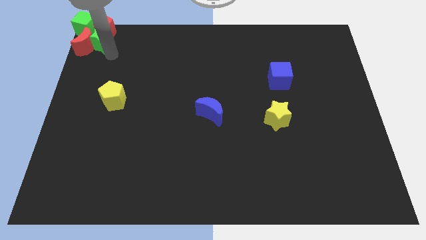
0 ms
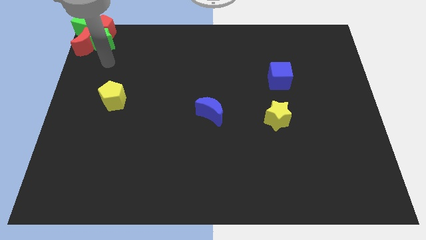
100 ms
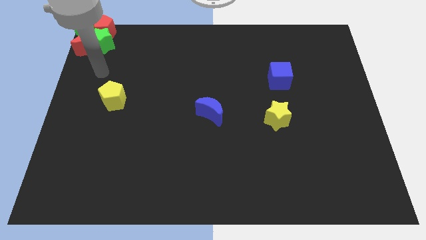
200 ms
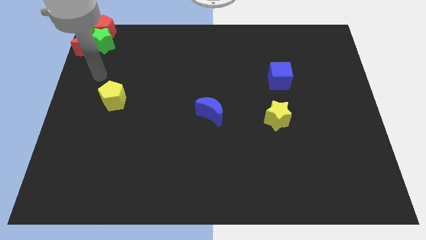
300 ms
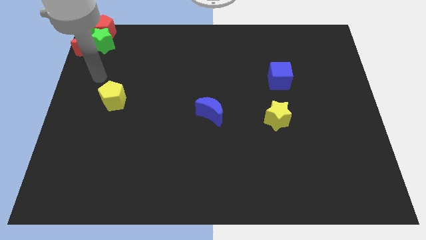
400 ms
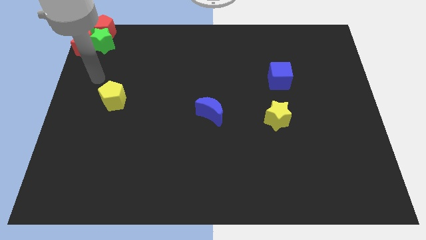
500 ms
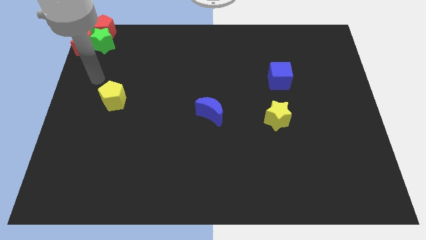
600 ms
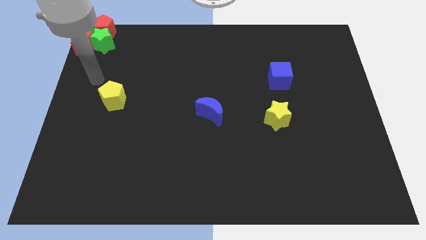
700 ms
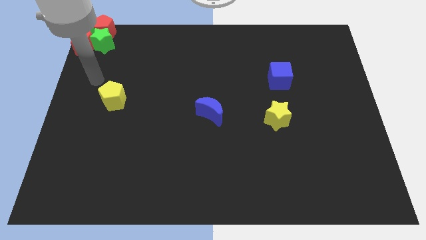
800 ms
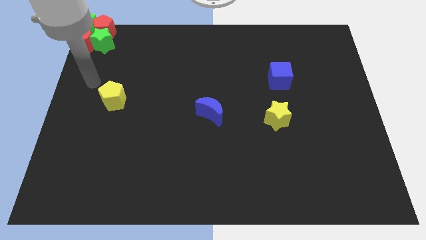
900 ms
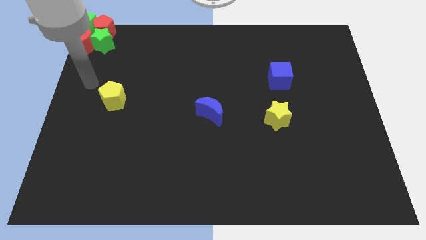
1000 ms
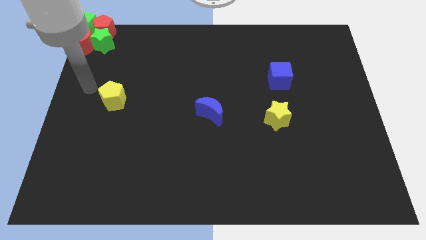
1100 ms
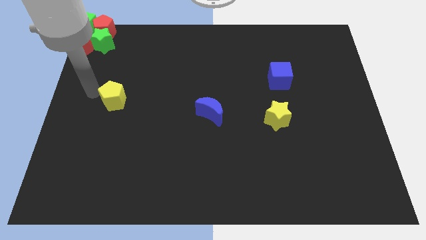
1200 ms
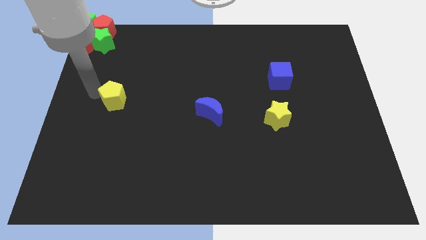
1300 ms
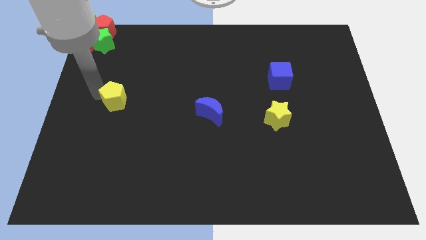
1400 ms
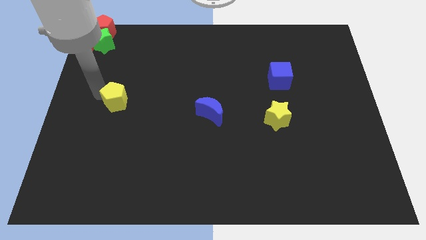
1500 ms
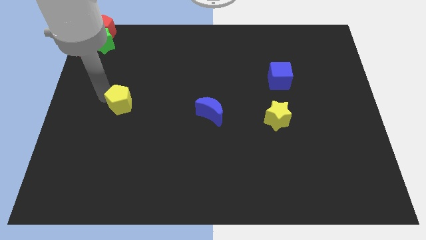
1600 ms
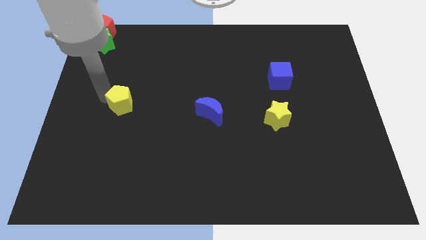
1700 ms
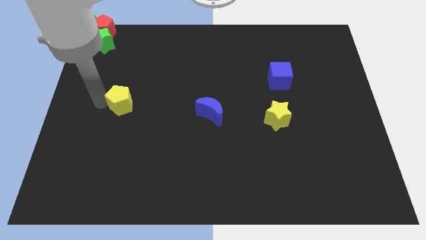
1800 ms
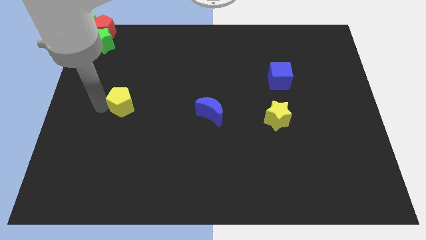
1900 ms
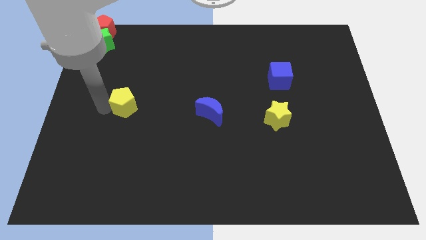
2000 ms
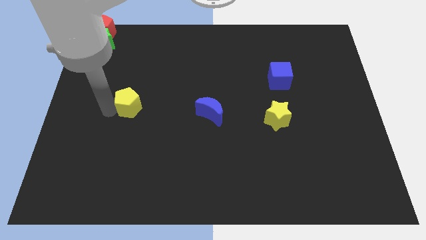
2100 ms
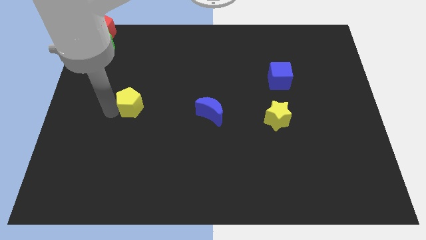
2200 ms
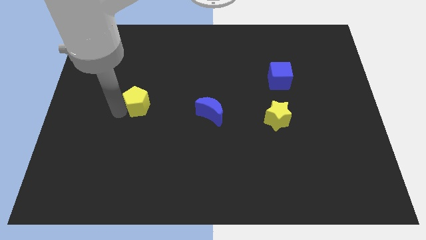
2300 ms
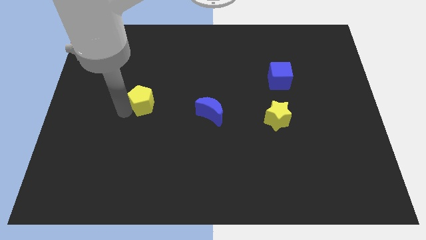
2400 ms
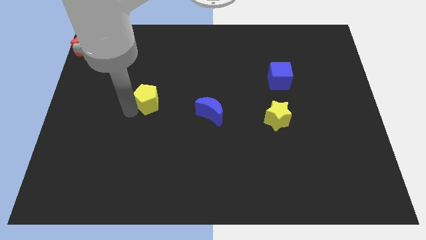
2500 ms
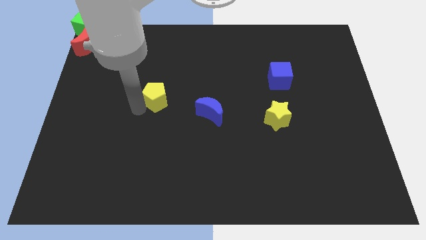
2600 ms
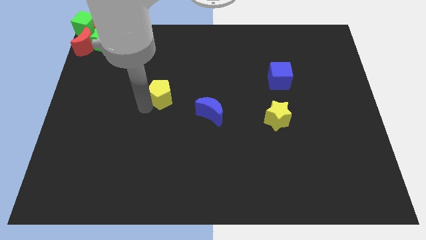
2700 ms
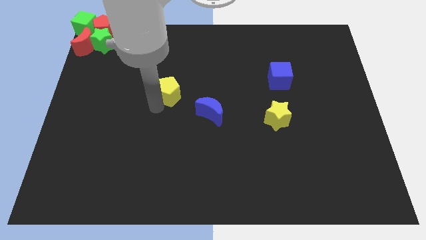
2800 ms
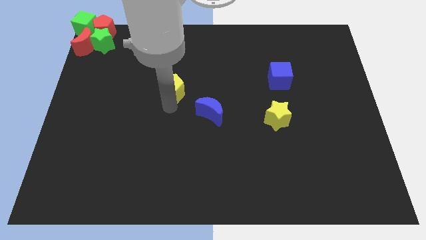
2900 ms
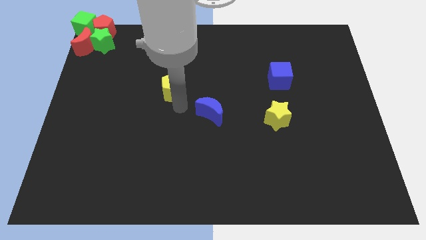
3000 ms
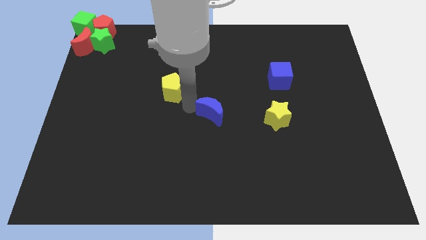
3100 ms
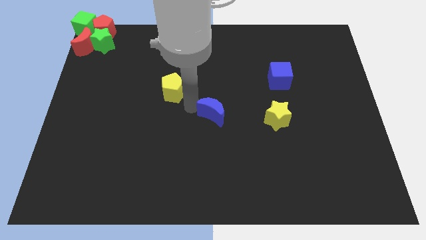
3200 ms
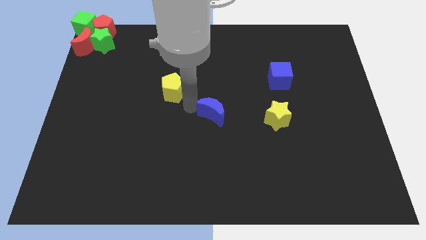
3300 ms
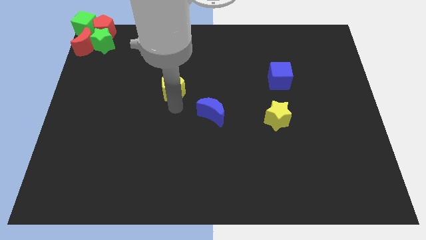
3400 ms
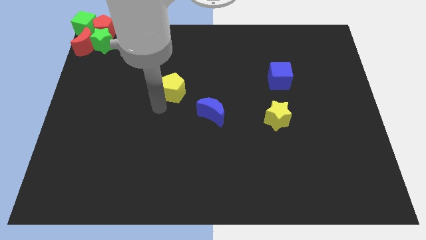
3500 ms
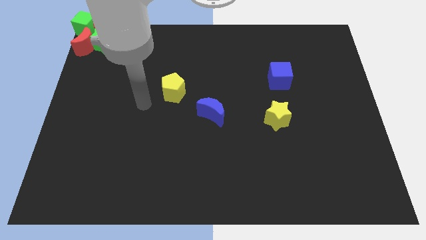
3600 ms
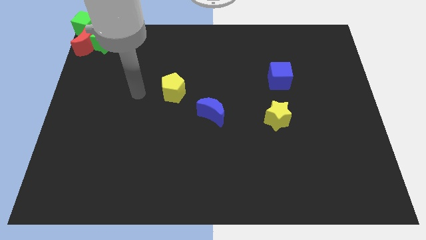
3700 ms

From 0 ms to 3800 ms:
place the yellow pentagon towards the top left of the blue crescent

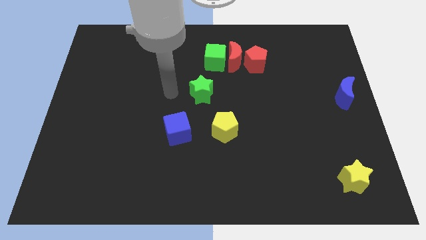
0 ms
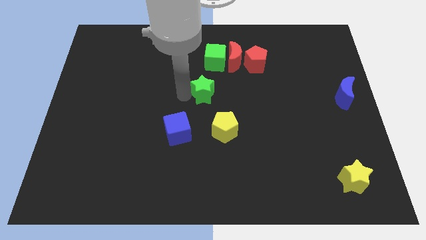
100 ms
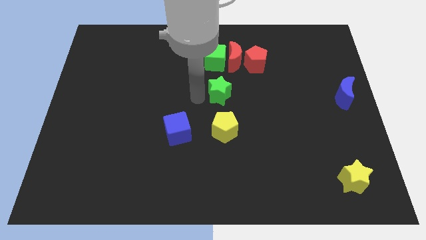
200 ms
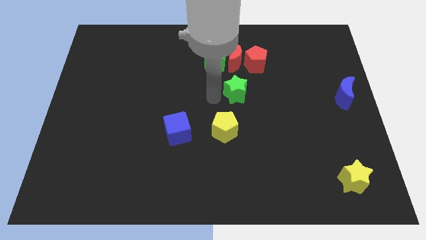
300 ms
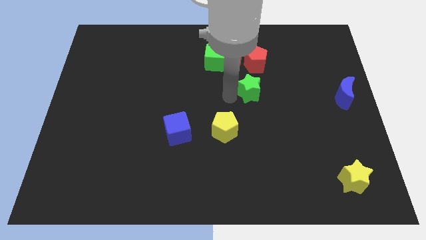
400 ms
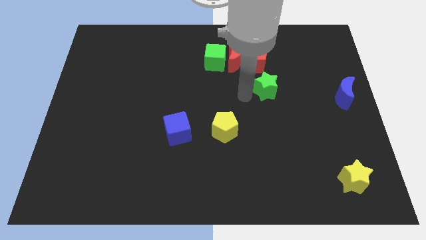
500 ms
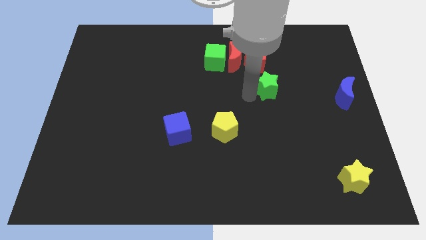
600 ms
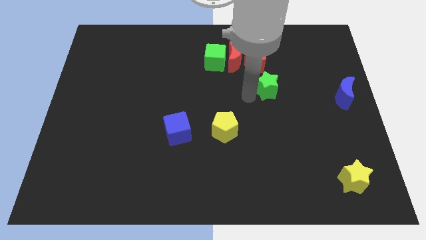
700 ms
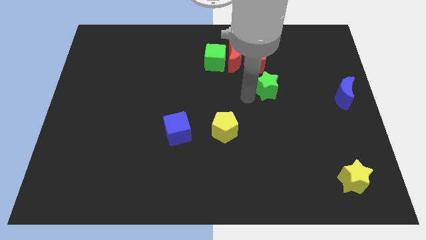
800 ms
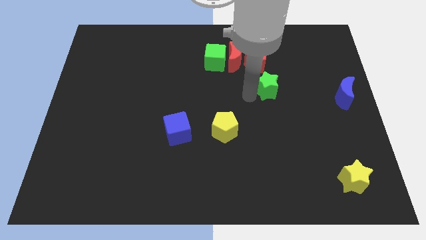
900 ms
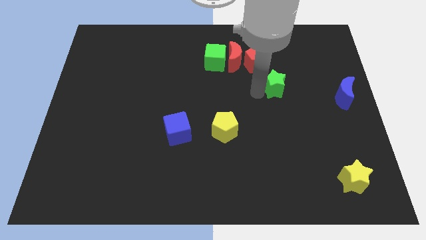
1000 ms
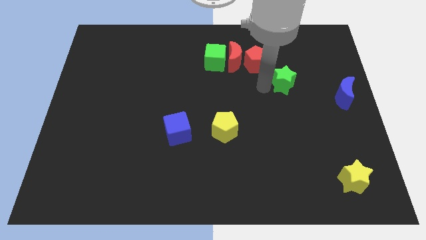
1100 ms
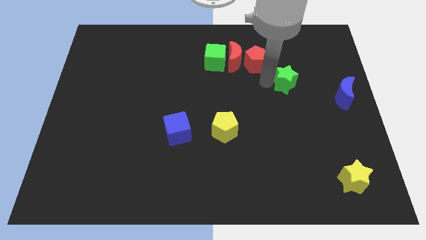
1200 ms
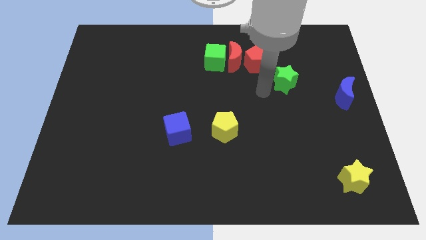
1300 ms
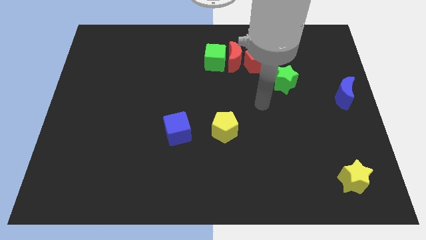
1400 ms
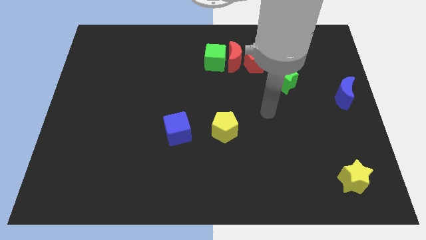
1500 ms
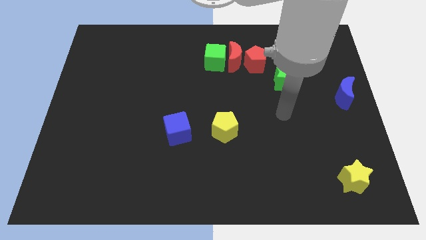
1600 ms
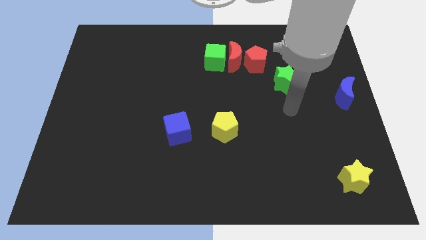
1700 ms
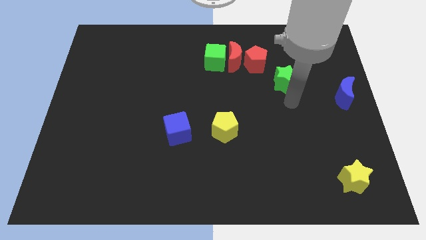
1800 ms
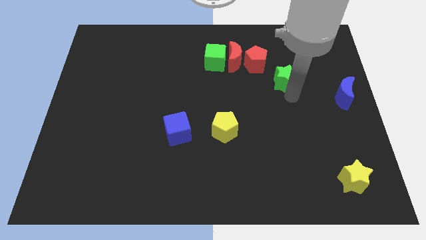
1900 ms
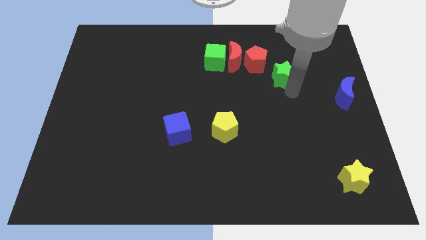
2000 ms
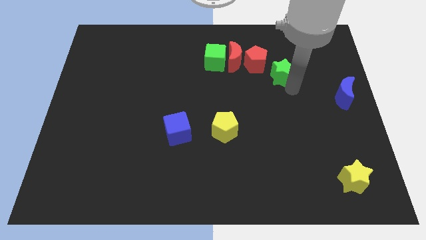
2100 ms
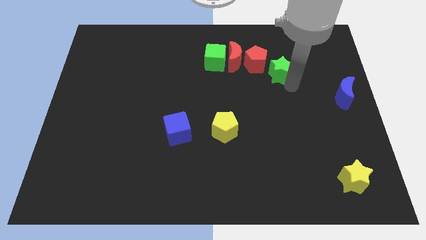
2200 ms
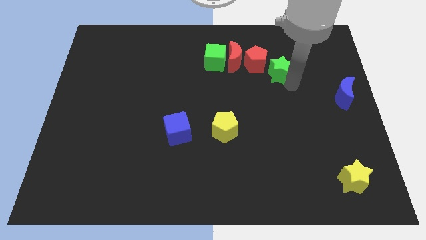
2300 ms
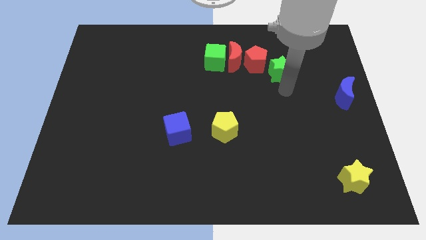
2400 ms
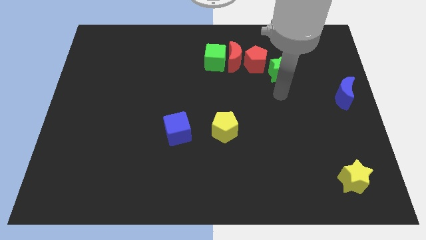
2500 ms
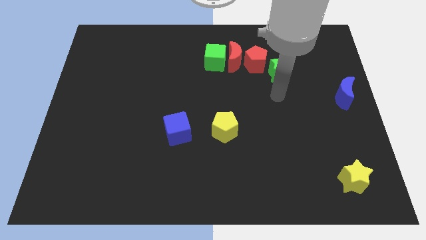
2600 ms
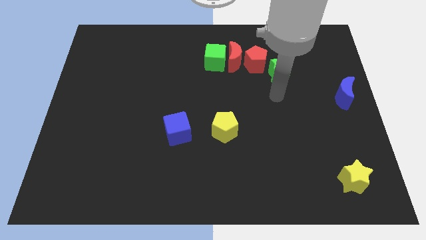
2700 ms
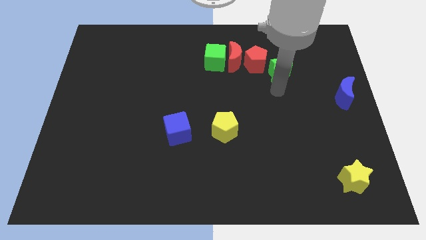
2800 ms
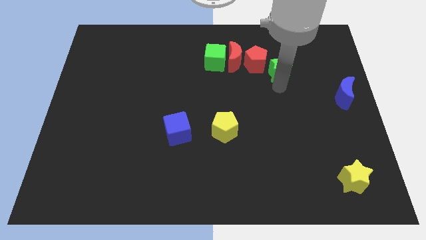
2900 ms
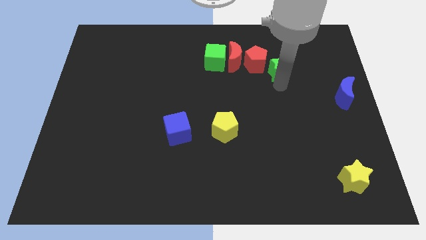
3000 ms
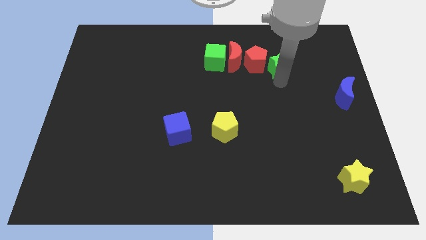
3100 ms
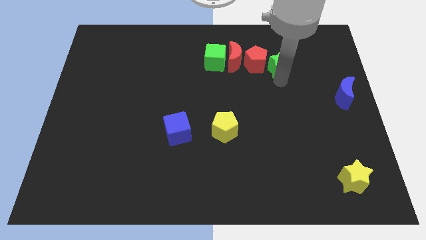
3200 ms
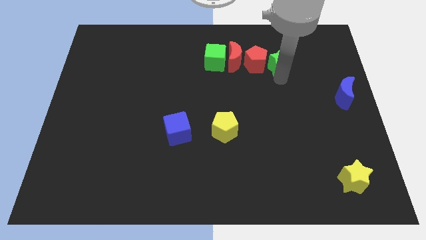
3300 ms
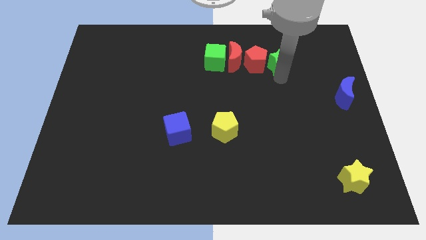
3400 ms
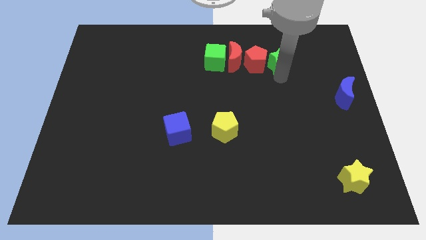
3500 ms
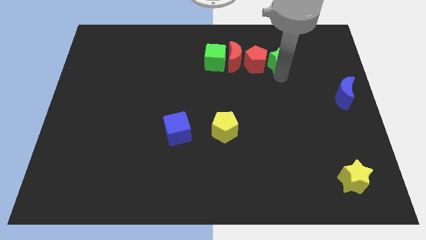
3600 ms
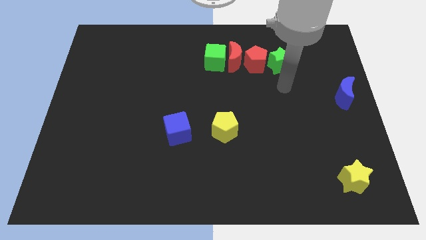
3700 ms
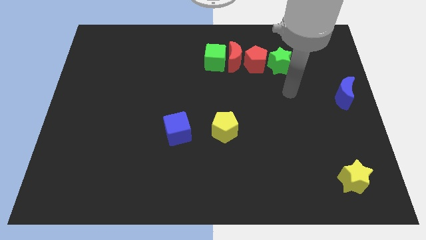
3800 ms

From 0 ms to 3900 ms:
move the green star right to the red pentagon

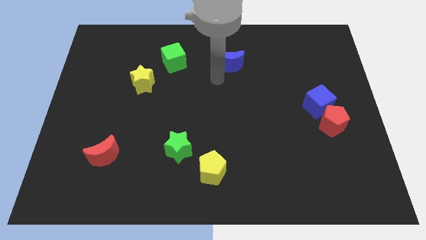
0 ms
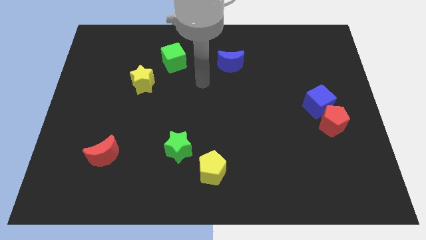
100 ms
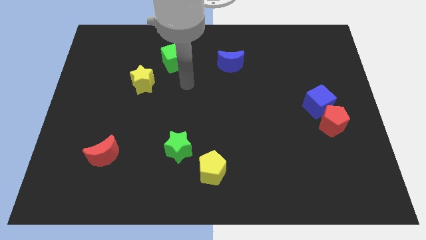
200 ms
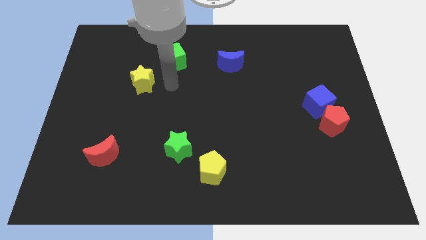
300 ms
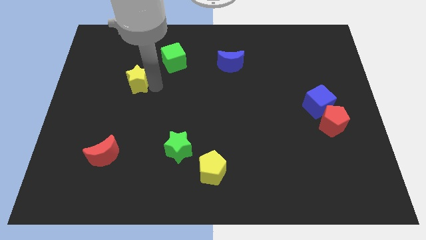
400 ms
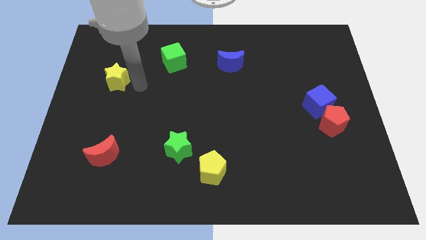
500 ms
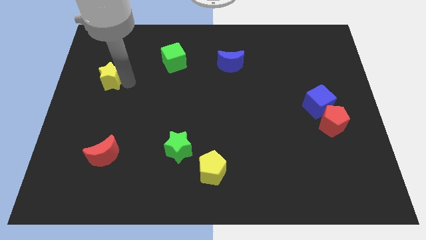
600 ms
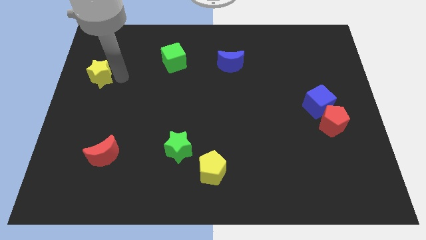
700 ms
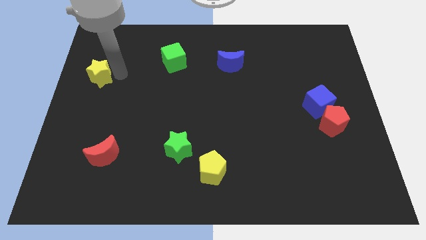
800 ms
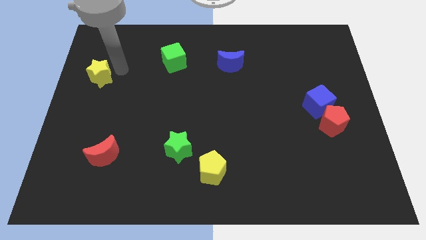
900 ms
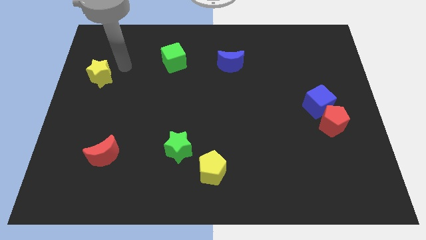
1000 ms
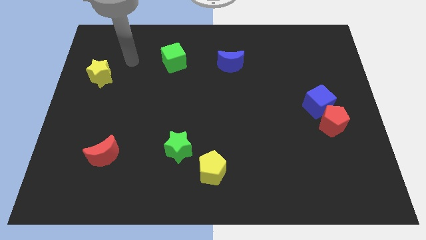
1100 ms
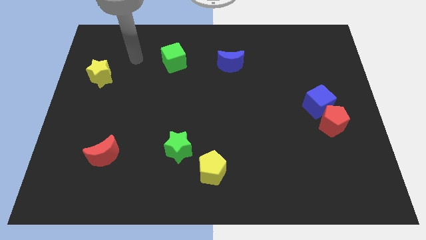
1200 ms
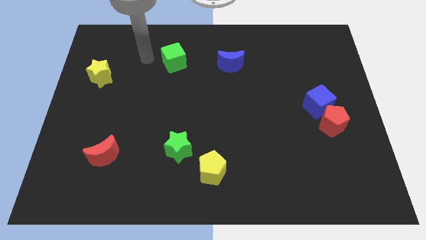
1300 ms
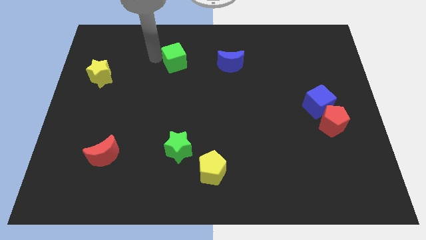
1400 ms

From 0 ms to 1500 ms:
push the yellow star to the left side of the board
